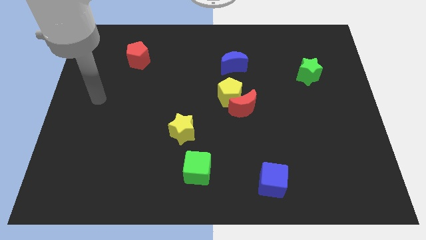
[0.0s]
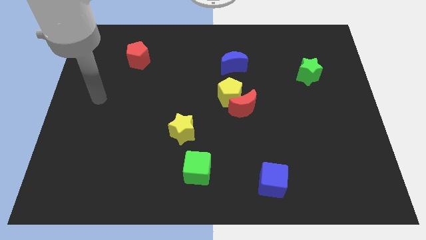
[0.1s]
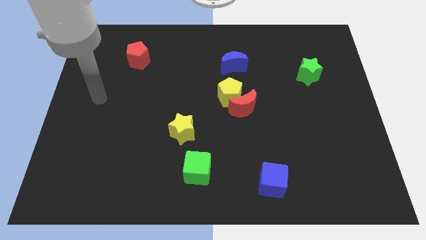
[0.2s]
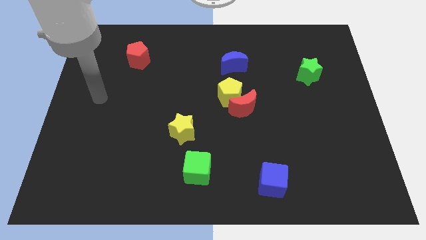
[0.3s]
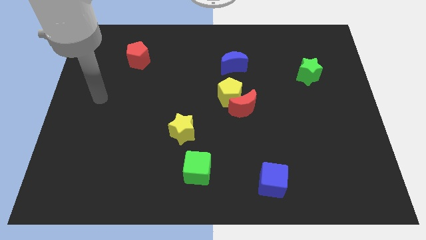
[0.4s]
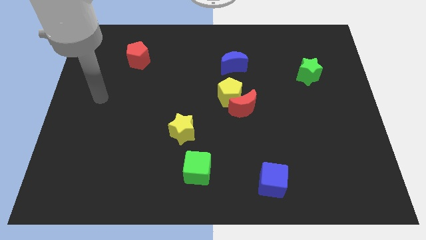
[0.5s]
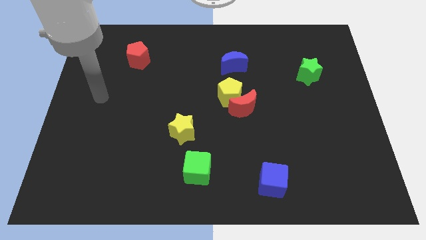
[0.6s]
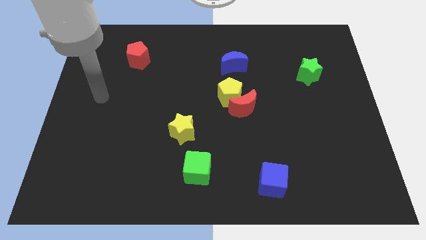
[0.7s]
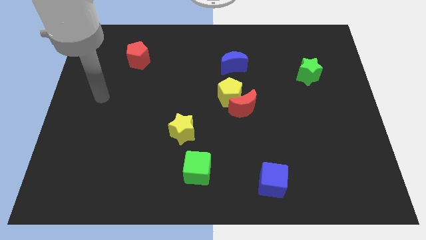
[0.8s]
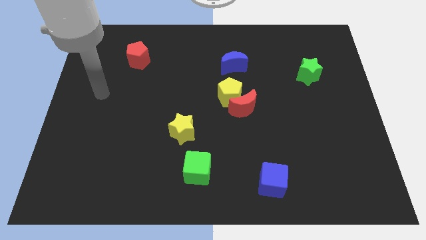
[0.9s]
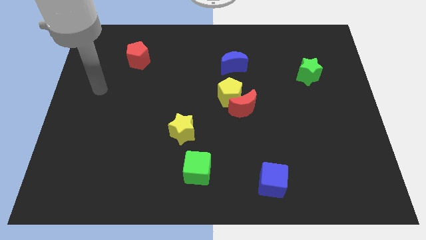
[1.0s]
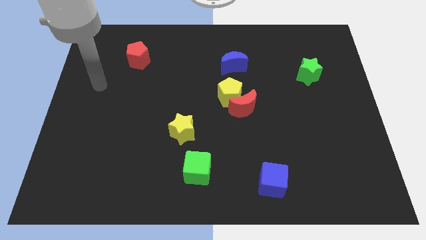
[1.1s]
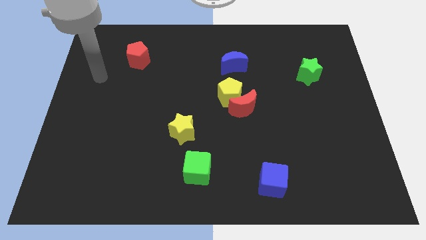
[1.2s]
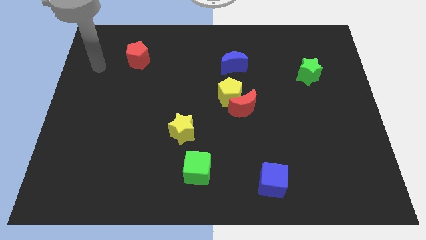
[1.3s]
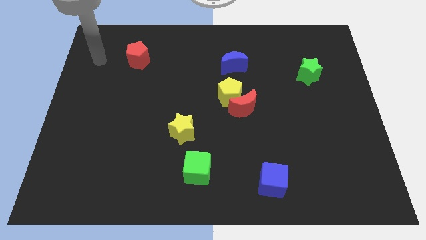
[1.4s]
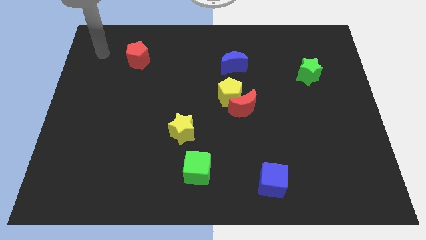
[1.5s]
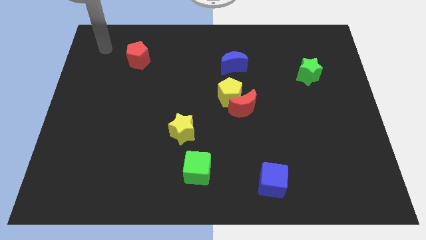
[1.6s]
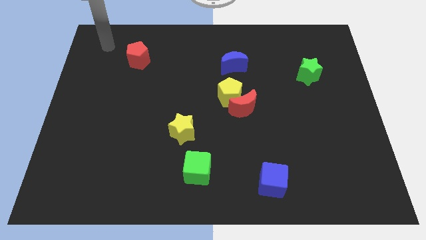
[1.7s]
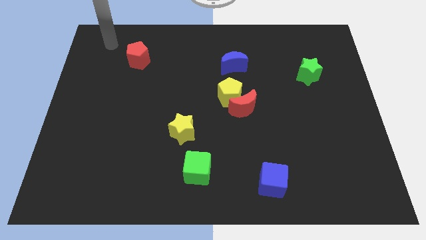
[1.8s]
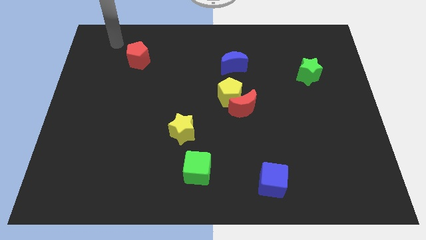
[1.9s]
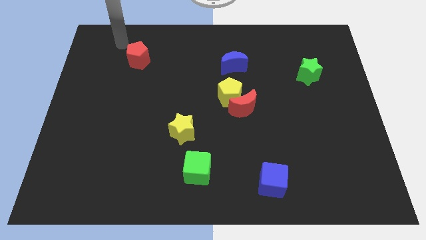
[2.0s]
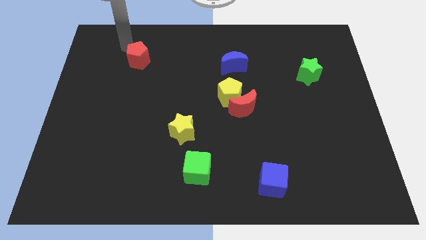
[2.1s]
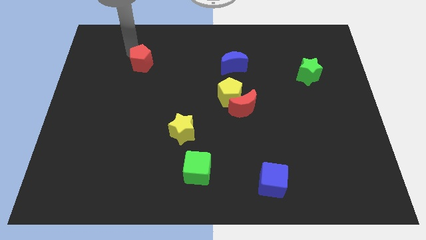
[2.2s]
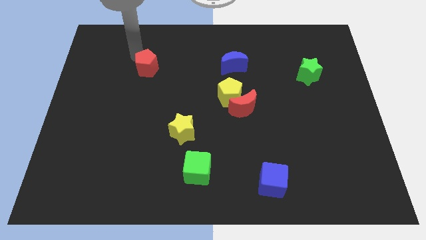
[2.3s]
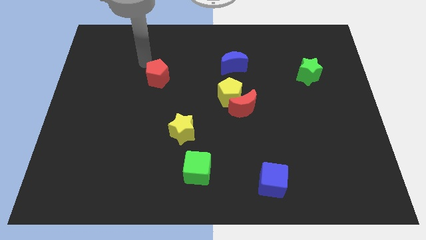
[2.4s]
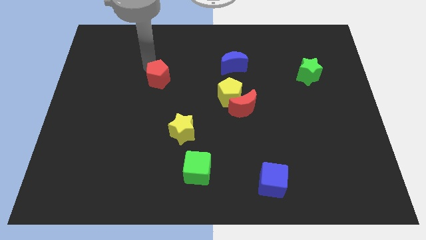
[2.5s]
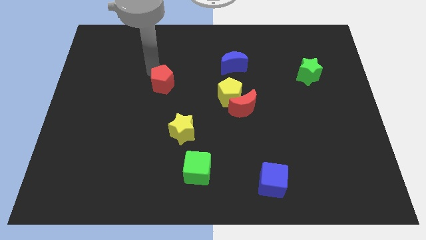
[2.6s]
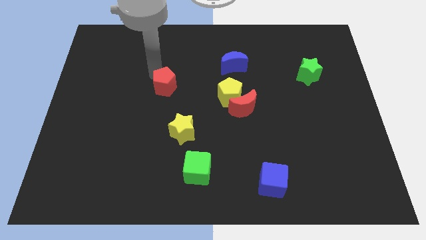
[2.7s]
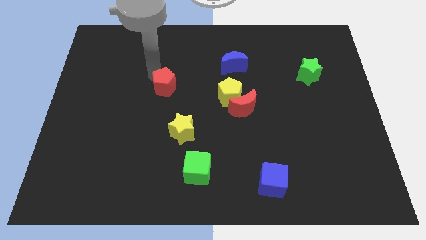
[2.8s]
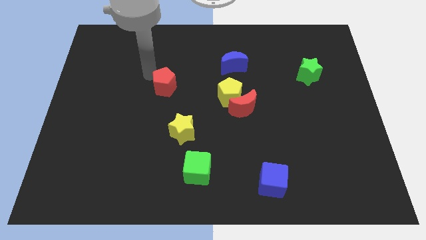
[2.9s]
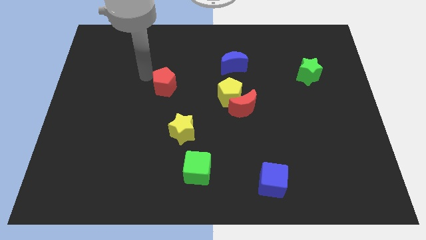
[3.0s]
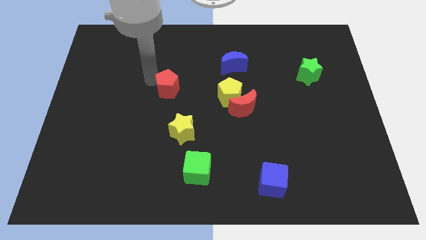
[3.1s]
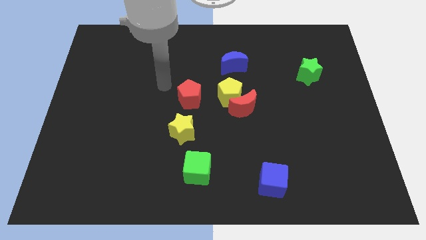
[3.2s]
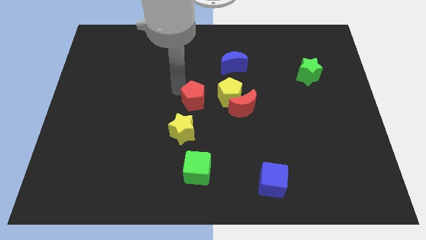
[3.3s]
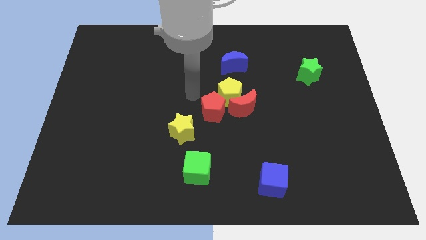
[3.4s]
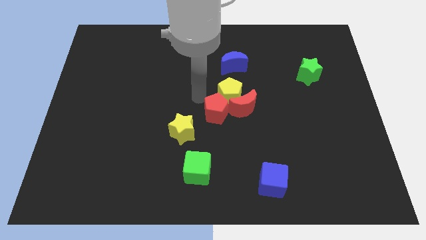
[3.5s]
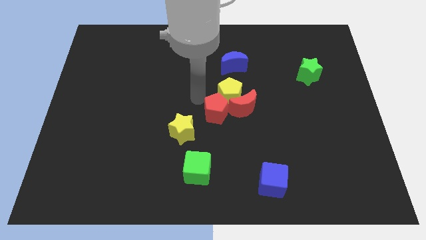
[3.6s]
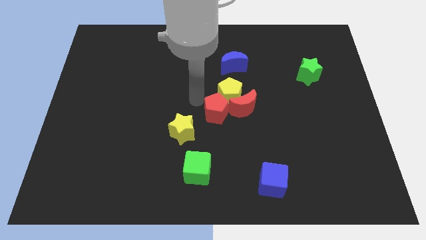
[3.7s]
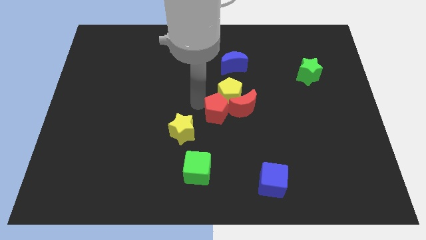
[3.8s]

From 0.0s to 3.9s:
move the red pentagon towards the left side of the red crescent

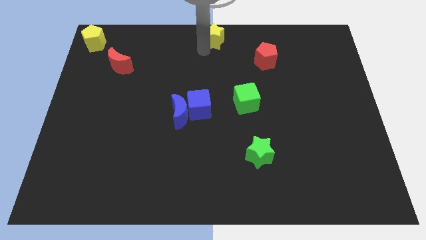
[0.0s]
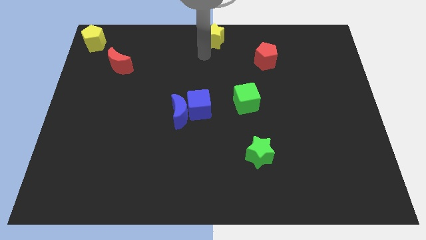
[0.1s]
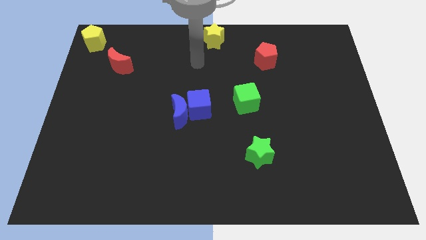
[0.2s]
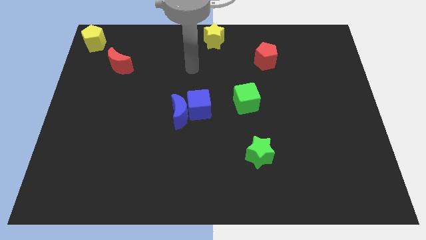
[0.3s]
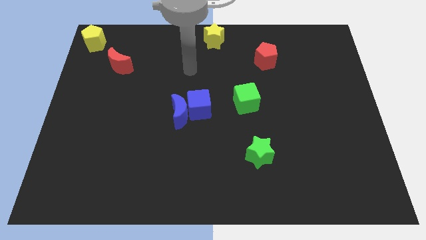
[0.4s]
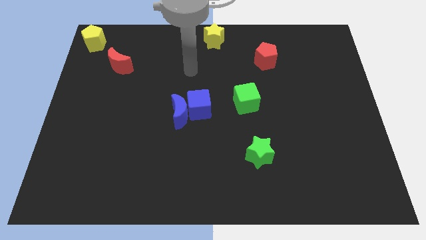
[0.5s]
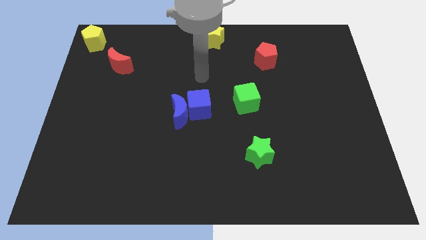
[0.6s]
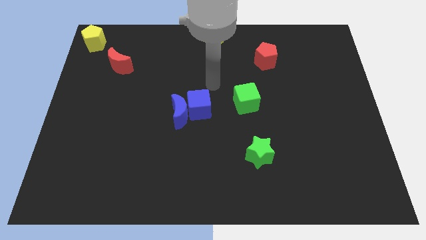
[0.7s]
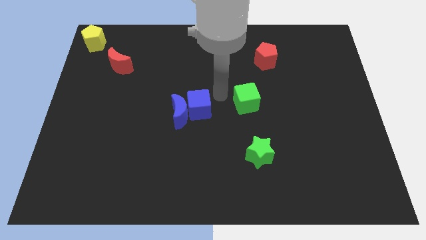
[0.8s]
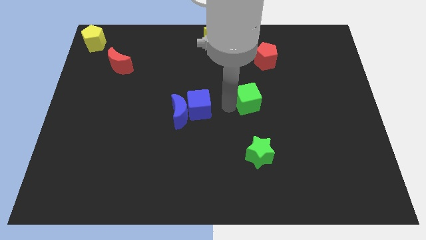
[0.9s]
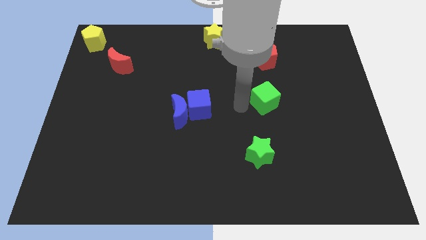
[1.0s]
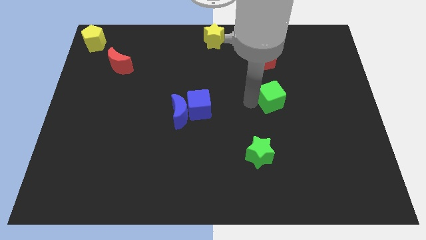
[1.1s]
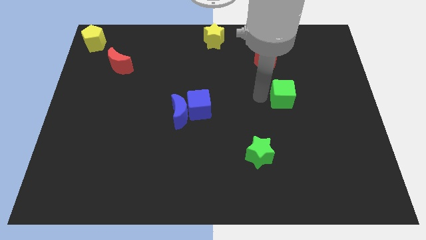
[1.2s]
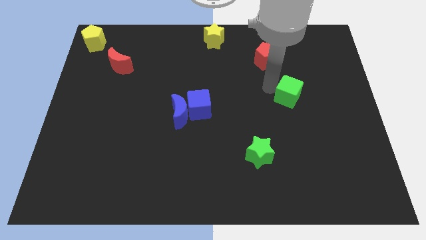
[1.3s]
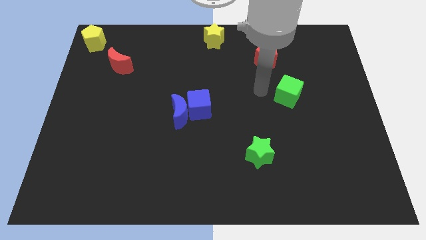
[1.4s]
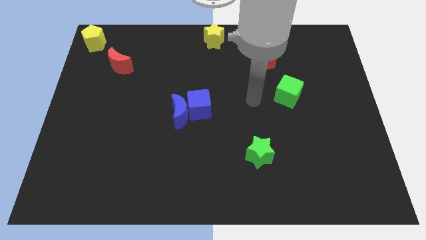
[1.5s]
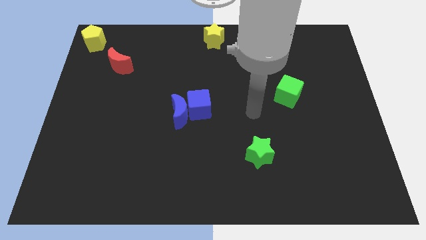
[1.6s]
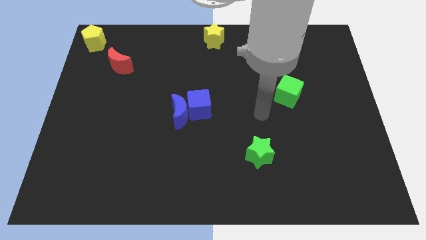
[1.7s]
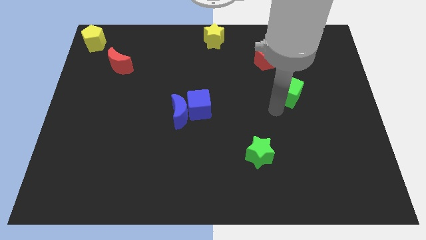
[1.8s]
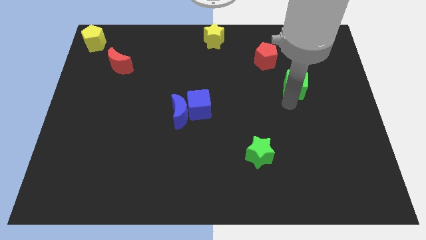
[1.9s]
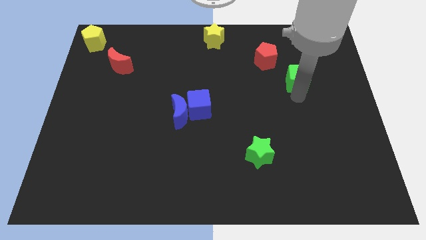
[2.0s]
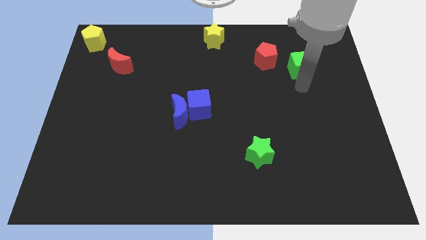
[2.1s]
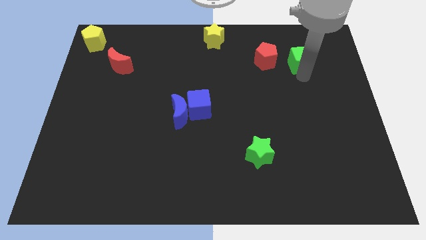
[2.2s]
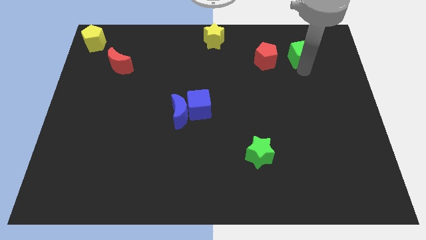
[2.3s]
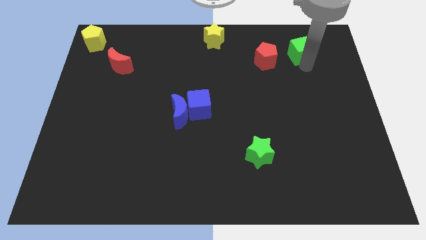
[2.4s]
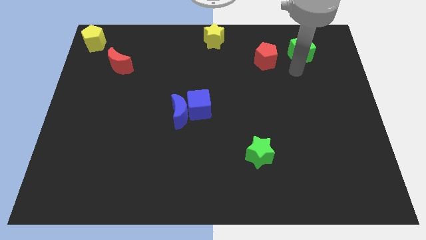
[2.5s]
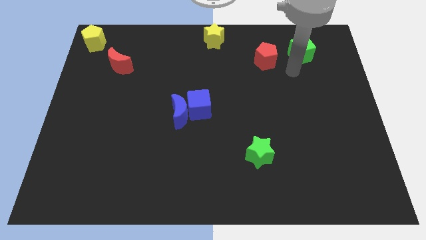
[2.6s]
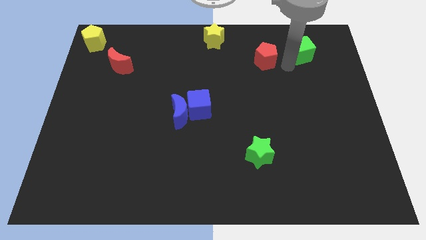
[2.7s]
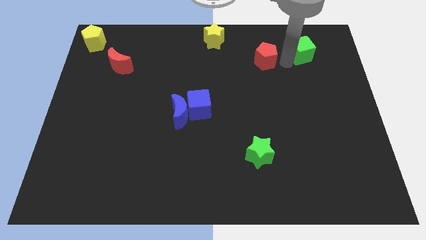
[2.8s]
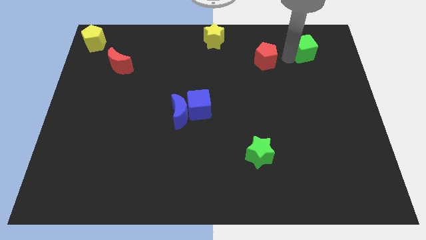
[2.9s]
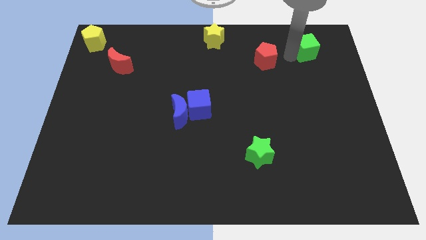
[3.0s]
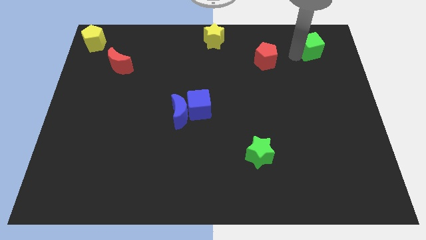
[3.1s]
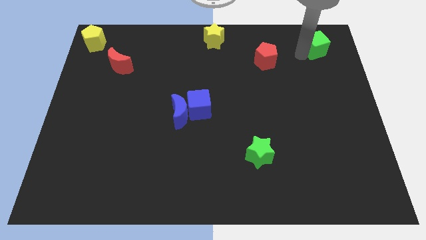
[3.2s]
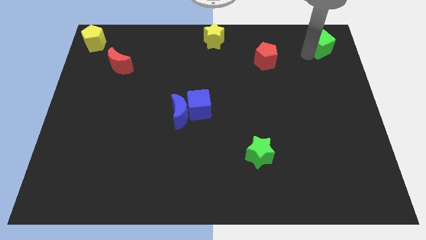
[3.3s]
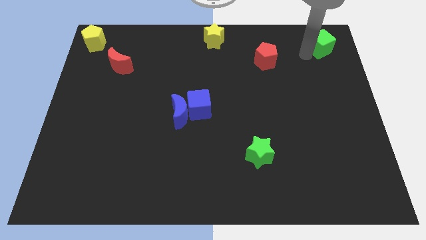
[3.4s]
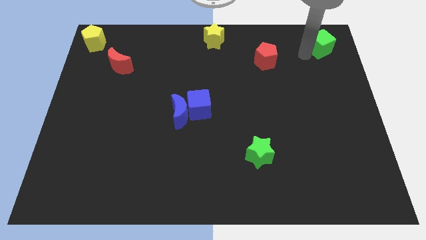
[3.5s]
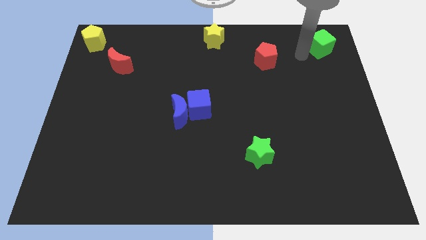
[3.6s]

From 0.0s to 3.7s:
slide the green cube to the top right of the table

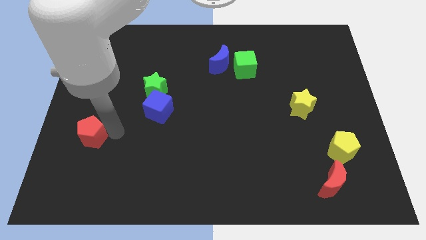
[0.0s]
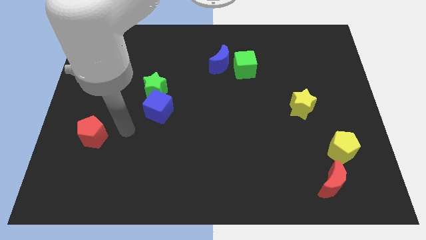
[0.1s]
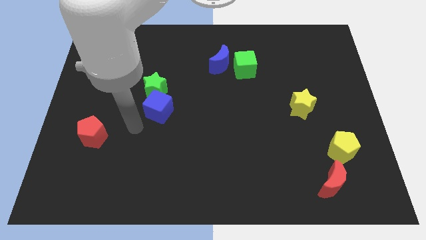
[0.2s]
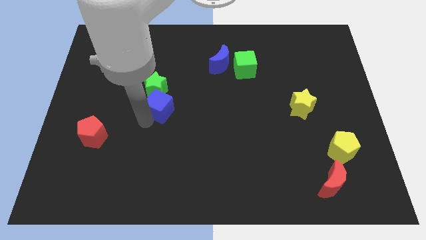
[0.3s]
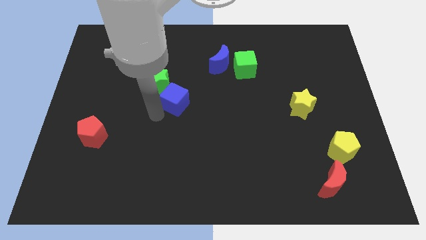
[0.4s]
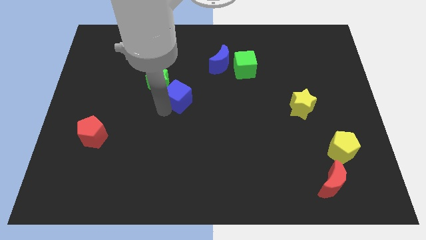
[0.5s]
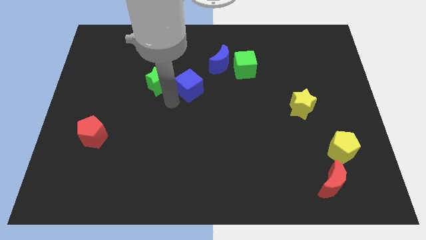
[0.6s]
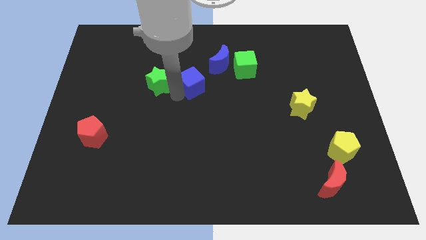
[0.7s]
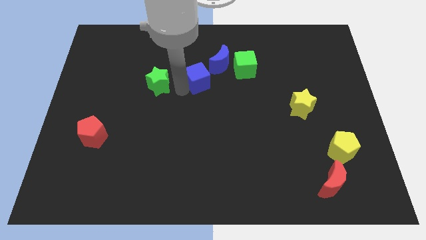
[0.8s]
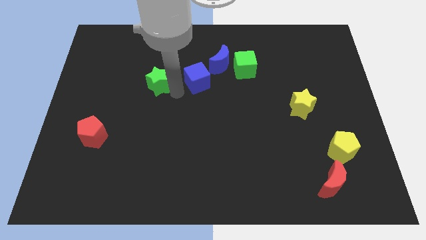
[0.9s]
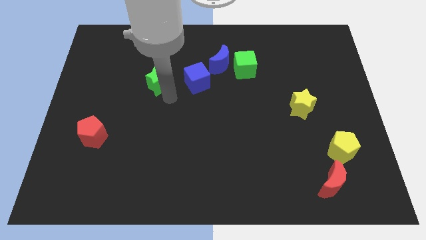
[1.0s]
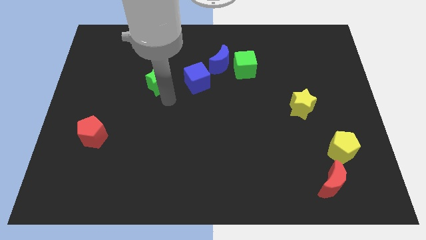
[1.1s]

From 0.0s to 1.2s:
put the blue cube parallel right to the green star

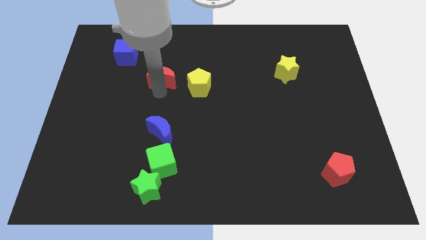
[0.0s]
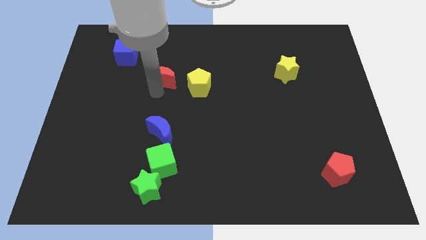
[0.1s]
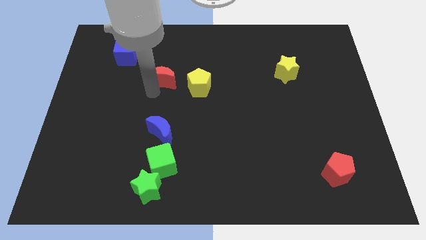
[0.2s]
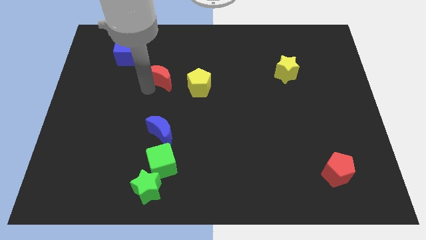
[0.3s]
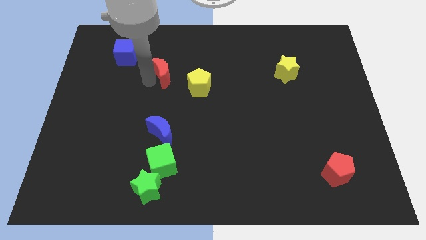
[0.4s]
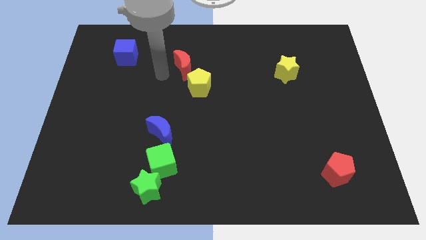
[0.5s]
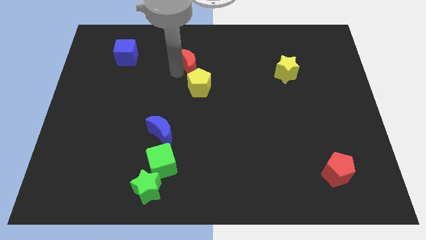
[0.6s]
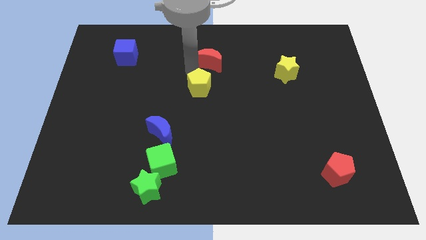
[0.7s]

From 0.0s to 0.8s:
place the red crescent above the yellow pentagon
